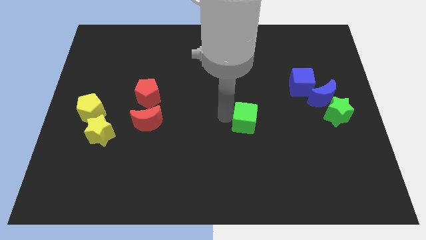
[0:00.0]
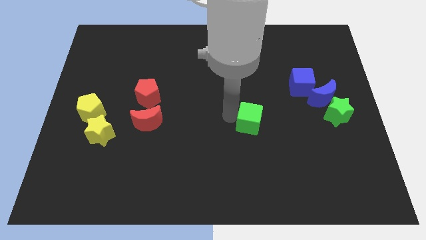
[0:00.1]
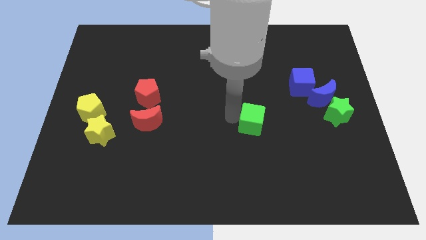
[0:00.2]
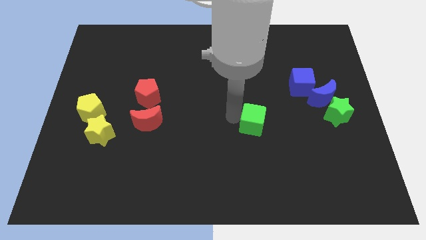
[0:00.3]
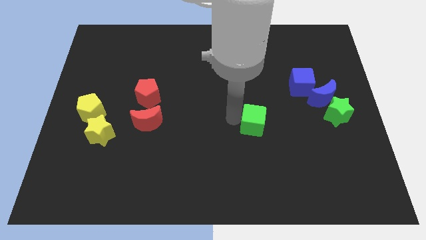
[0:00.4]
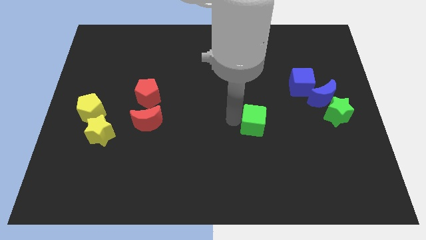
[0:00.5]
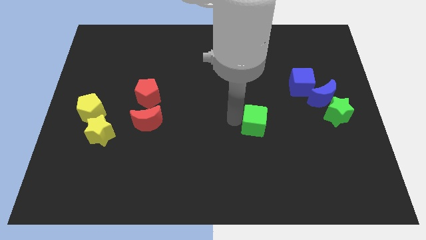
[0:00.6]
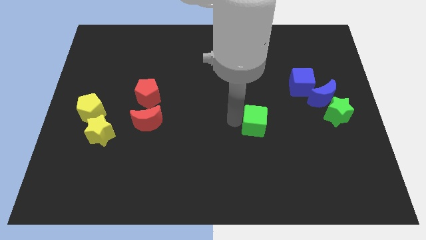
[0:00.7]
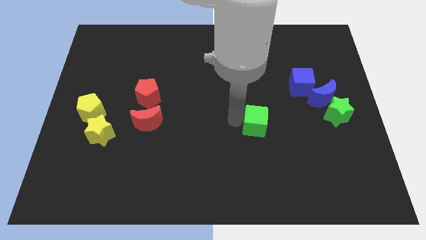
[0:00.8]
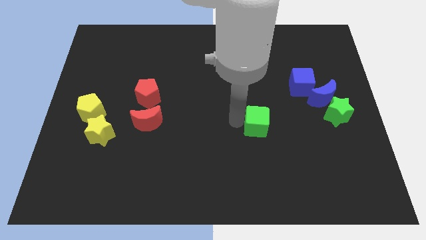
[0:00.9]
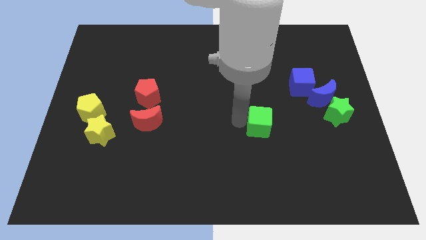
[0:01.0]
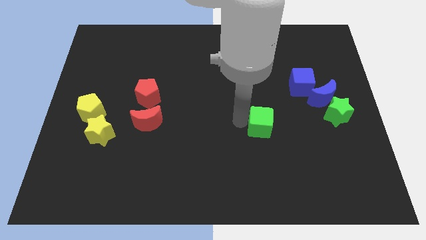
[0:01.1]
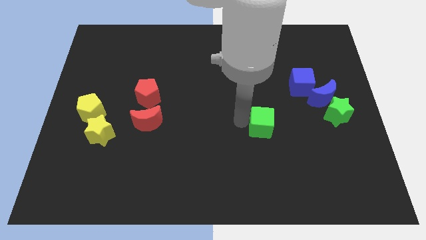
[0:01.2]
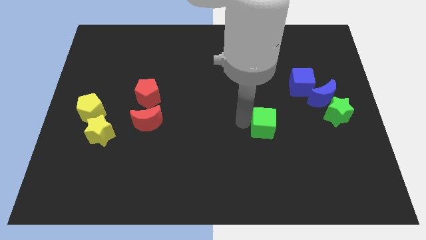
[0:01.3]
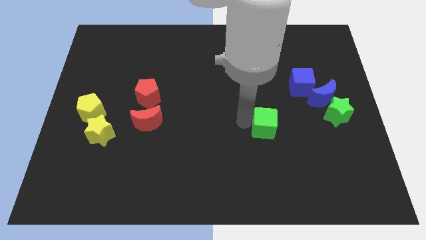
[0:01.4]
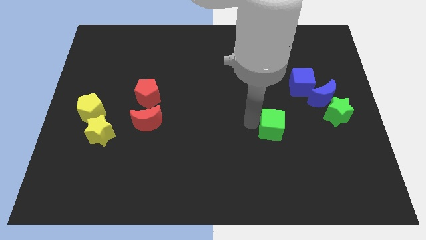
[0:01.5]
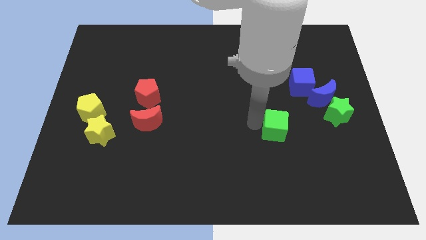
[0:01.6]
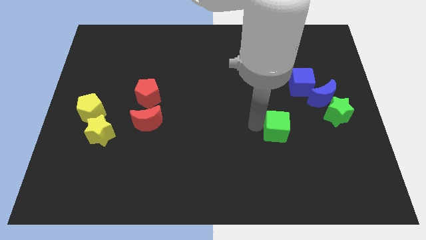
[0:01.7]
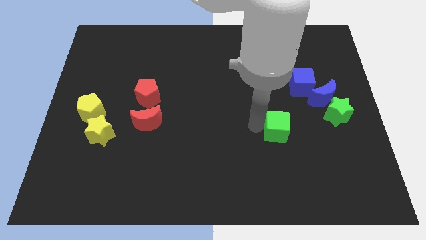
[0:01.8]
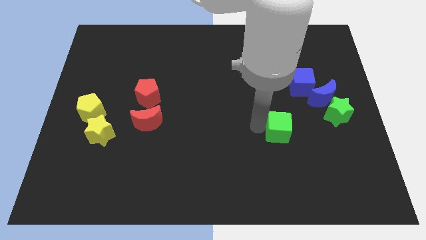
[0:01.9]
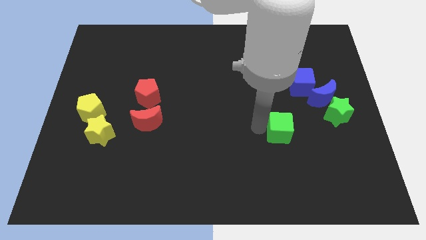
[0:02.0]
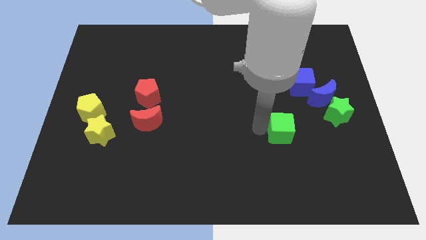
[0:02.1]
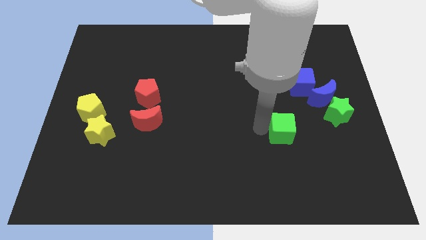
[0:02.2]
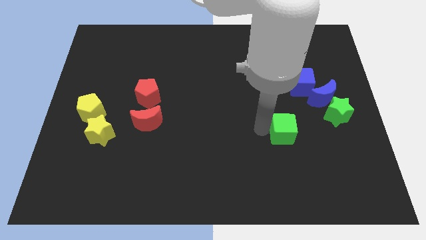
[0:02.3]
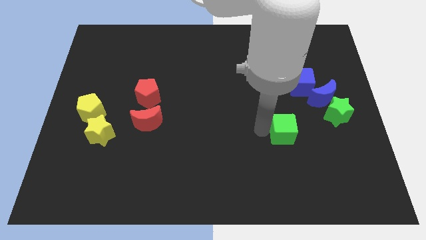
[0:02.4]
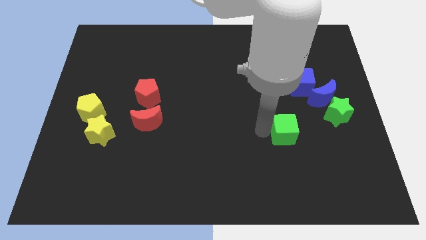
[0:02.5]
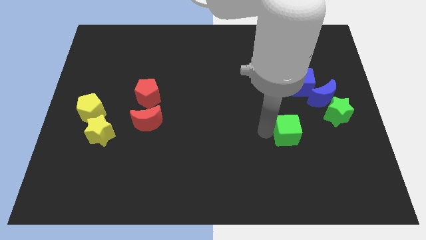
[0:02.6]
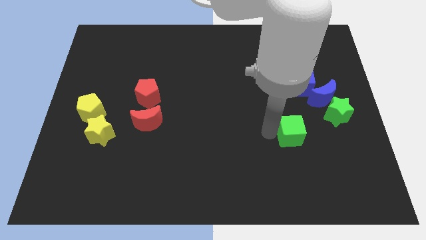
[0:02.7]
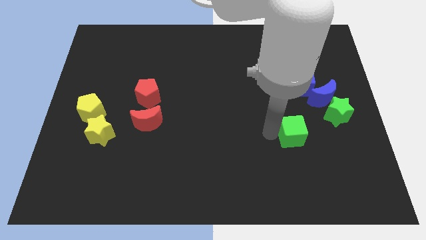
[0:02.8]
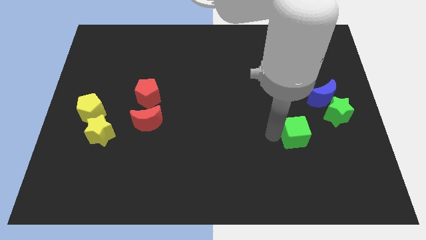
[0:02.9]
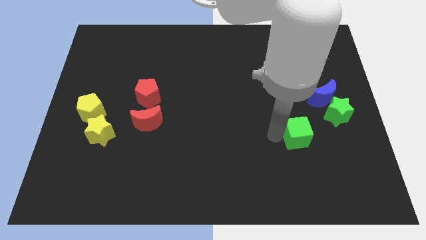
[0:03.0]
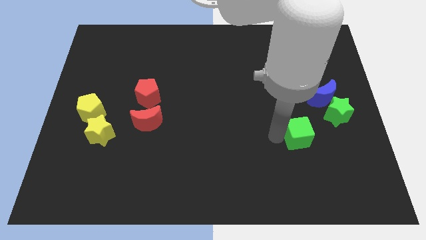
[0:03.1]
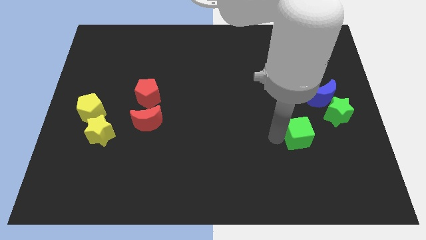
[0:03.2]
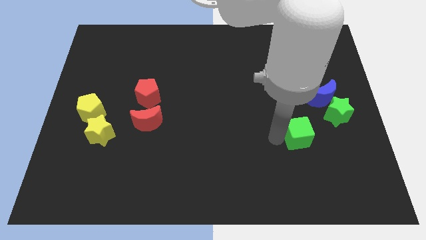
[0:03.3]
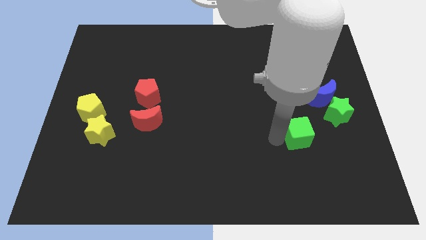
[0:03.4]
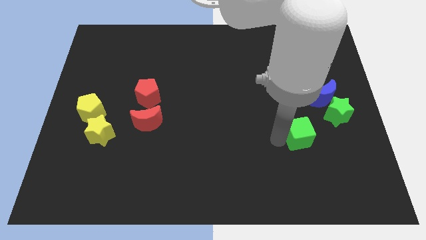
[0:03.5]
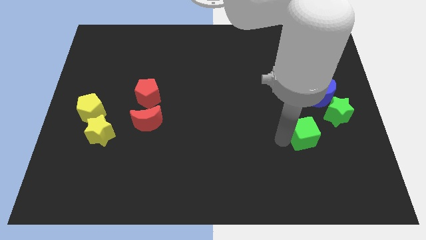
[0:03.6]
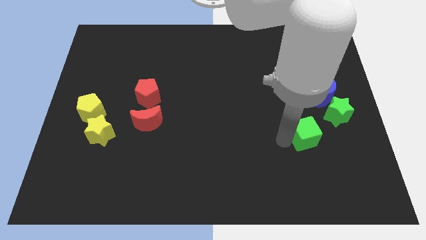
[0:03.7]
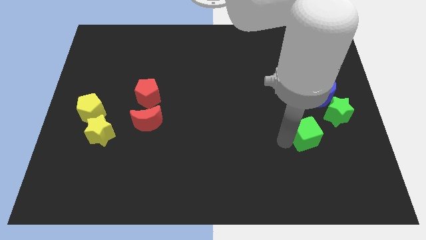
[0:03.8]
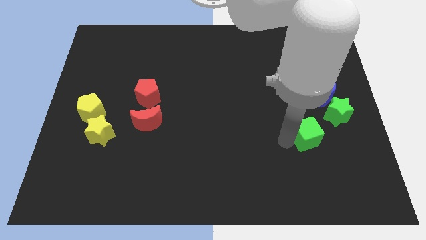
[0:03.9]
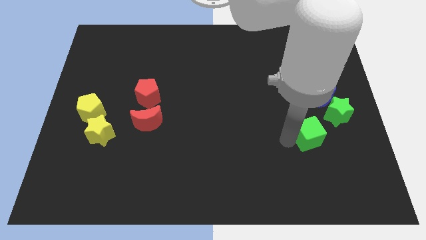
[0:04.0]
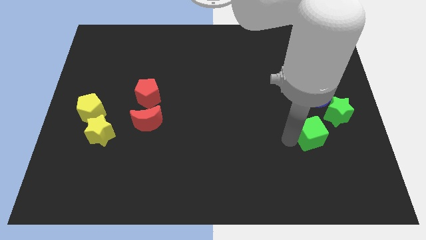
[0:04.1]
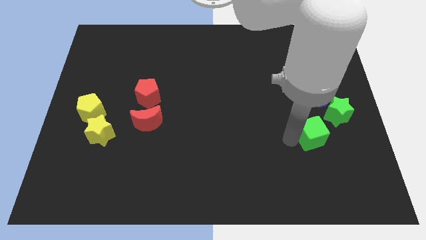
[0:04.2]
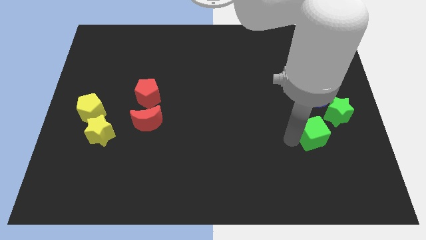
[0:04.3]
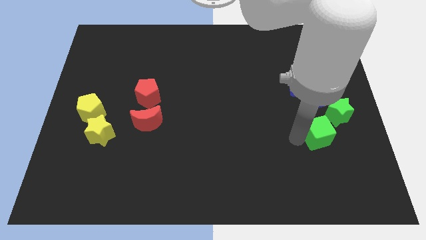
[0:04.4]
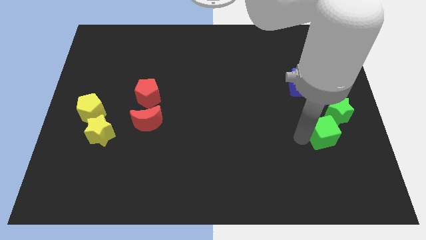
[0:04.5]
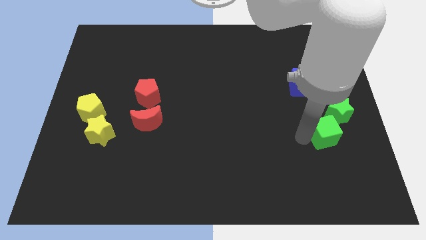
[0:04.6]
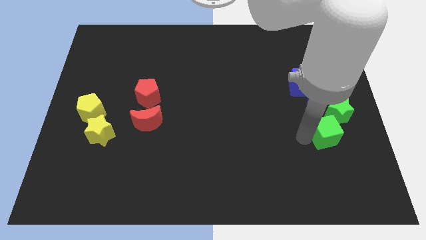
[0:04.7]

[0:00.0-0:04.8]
move the green cube towards the bottom side of the green star

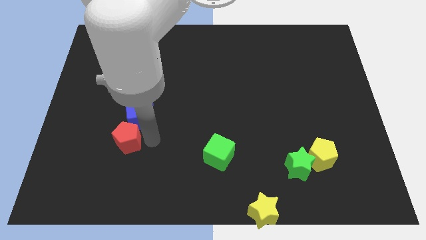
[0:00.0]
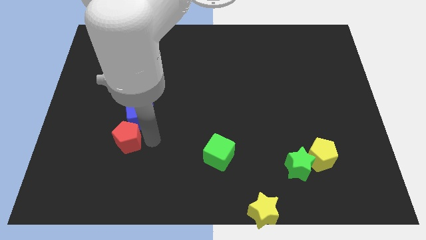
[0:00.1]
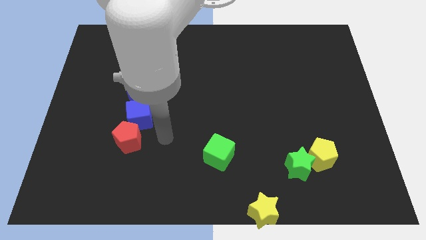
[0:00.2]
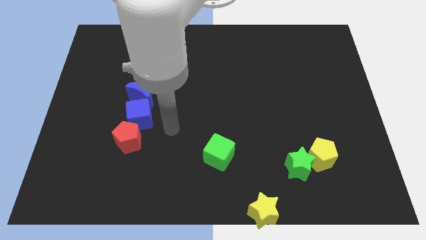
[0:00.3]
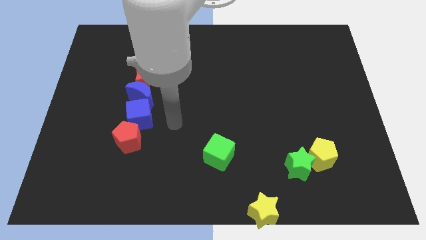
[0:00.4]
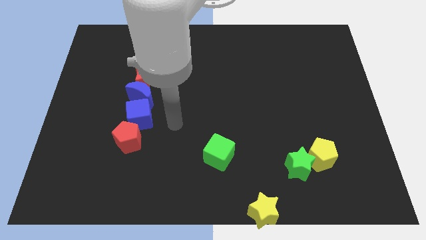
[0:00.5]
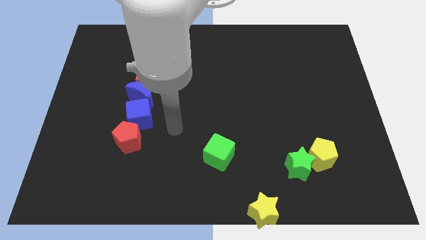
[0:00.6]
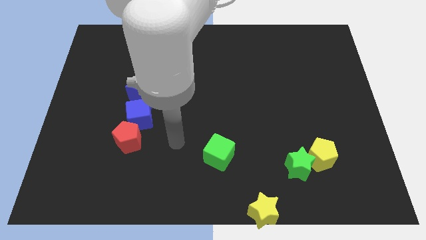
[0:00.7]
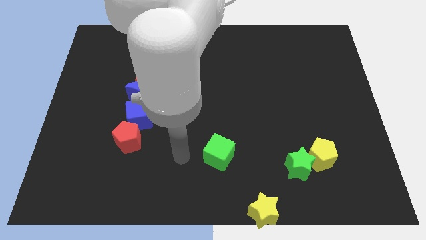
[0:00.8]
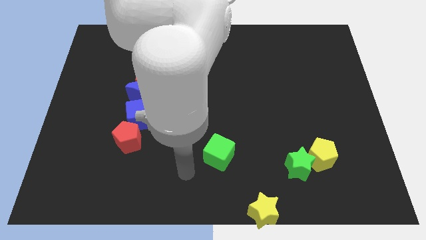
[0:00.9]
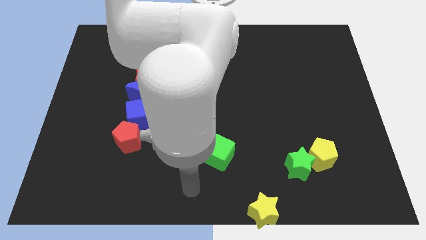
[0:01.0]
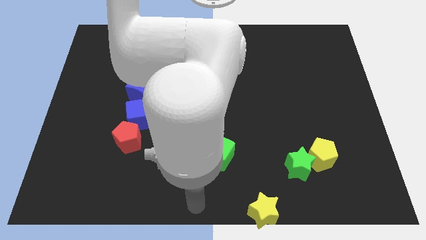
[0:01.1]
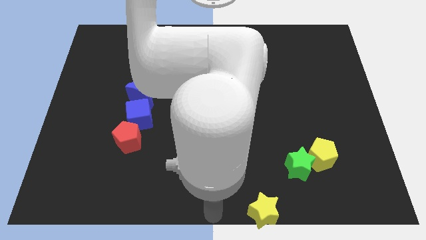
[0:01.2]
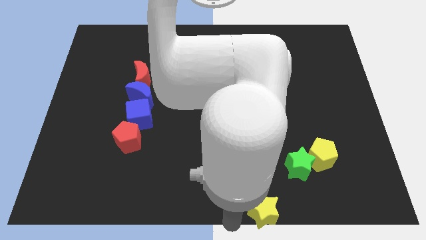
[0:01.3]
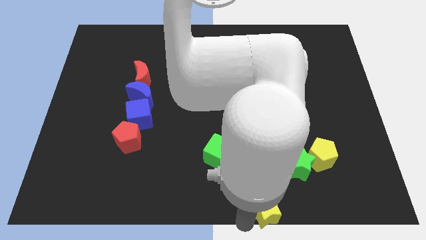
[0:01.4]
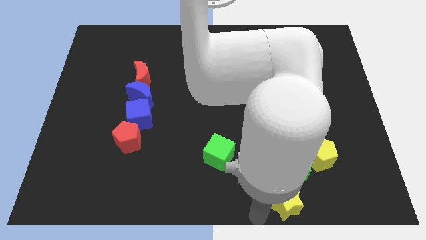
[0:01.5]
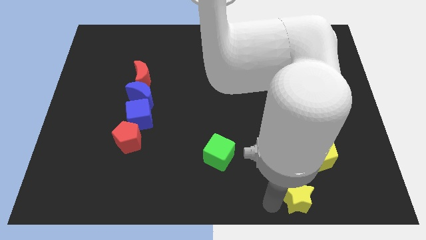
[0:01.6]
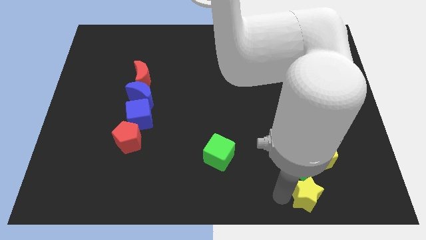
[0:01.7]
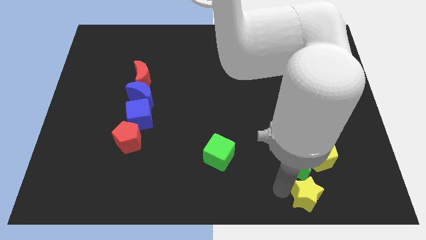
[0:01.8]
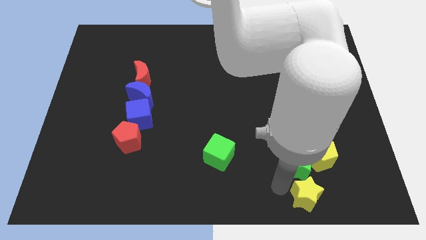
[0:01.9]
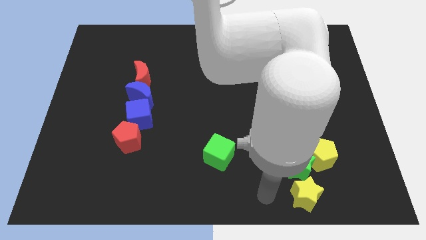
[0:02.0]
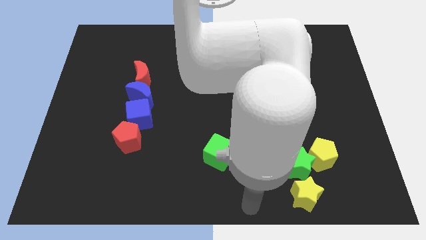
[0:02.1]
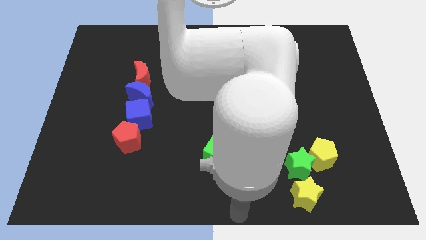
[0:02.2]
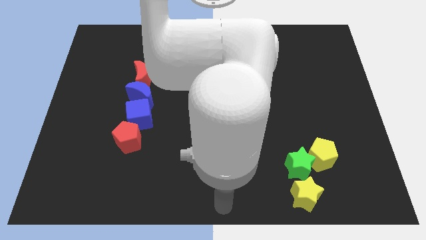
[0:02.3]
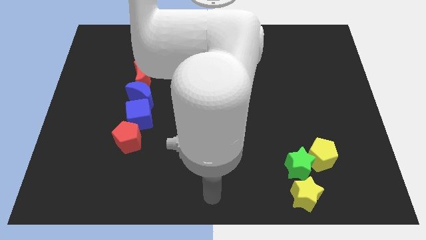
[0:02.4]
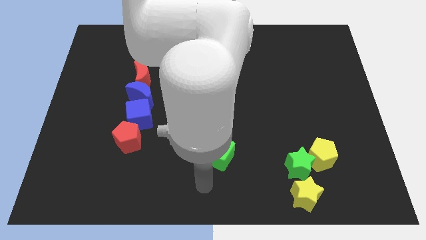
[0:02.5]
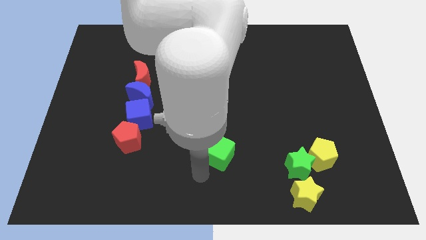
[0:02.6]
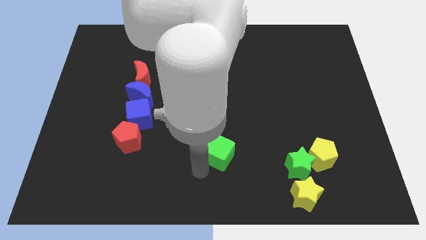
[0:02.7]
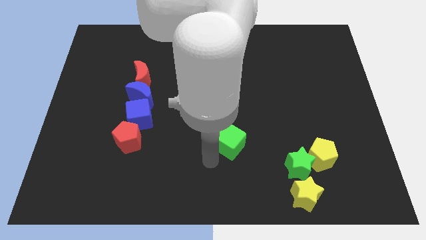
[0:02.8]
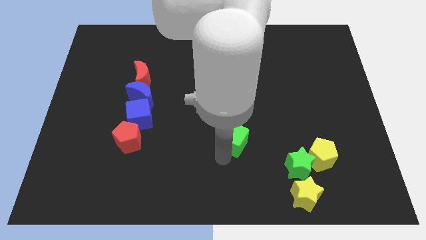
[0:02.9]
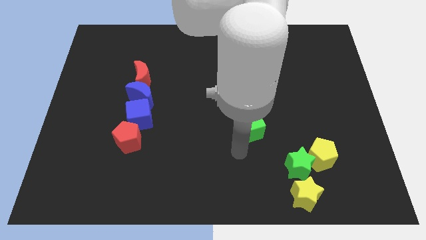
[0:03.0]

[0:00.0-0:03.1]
move the yellow star towards the green star

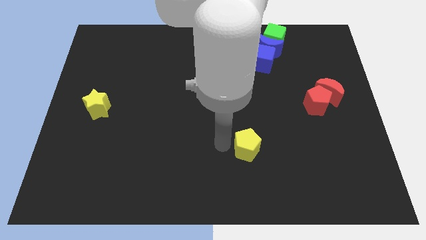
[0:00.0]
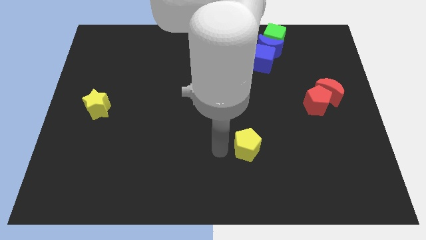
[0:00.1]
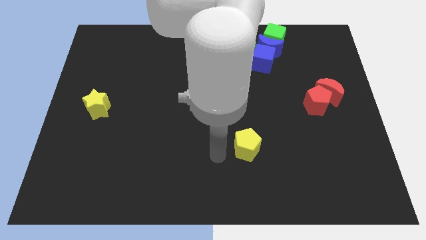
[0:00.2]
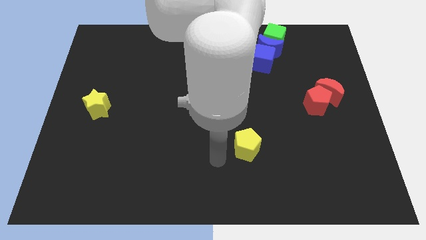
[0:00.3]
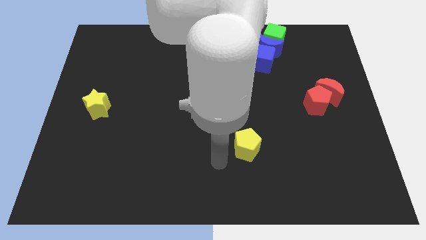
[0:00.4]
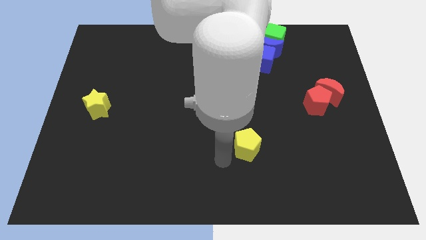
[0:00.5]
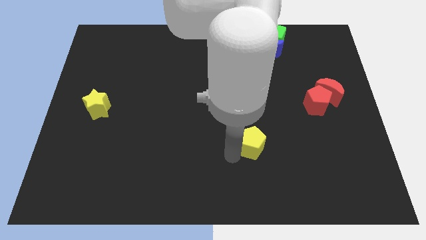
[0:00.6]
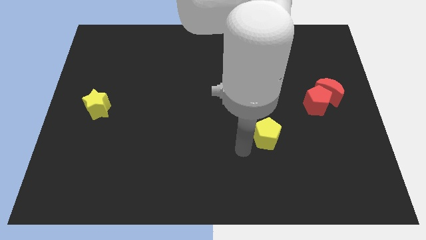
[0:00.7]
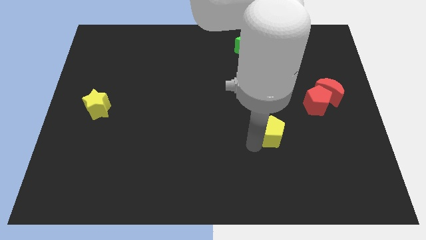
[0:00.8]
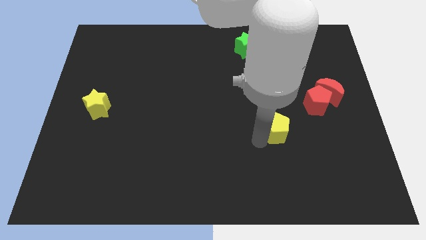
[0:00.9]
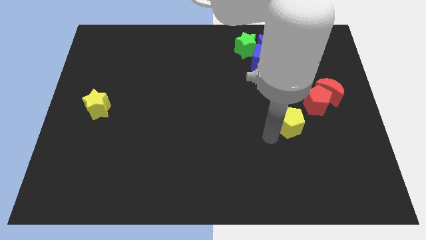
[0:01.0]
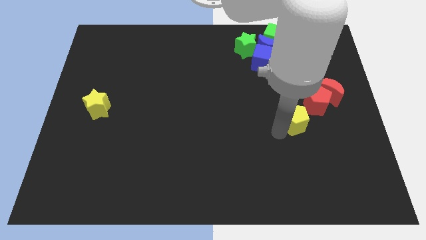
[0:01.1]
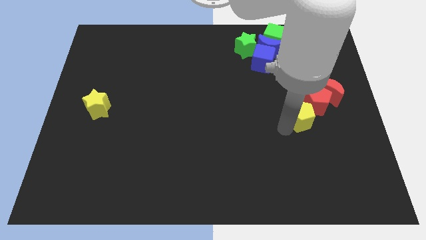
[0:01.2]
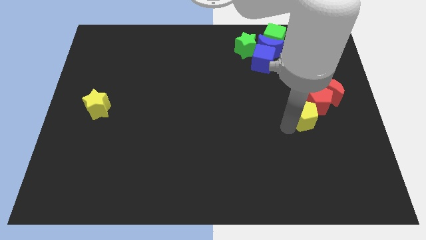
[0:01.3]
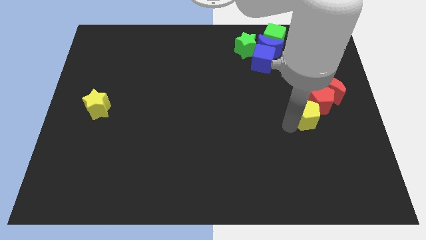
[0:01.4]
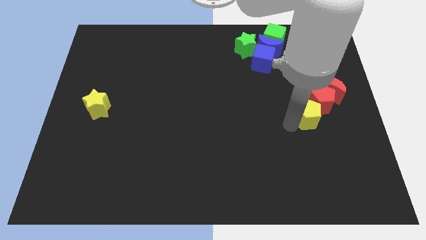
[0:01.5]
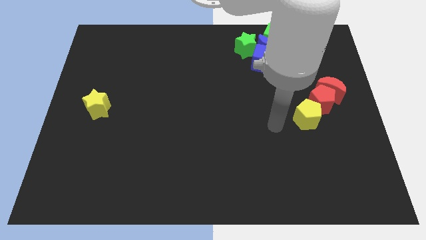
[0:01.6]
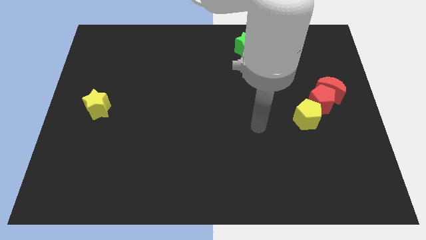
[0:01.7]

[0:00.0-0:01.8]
push the yellow pentagon into the red pentagon
